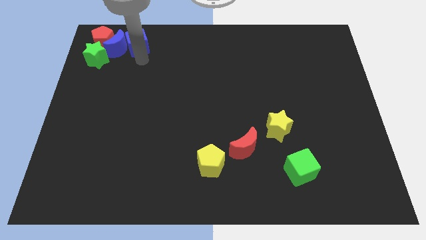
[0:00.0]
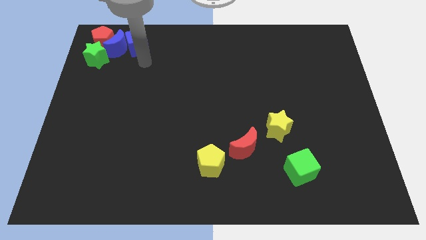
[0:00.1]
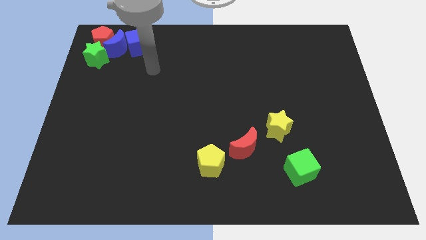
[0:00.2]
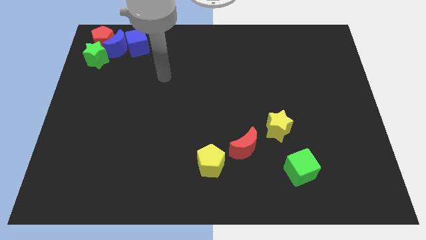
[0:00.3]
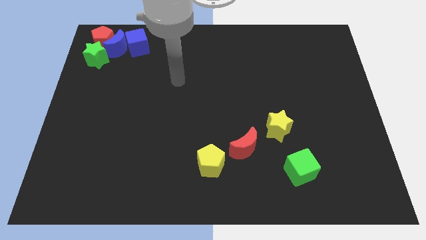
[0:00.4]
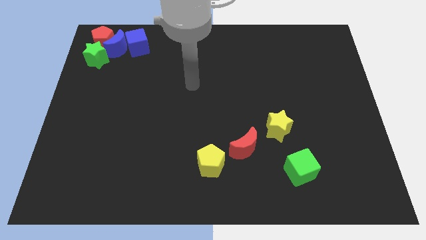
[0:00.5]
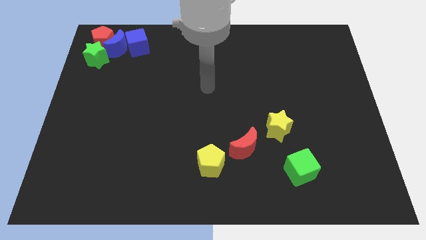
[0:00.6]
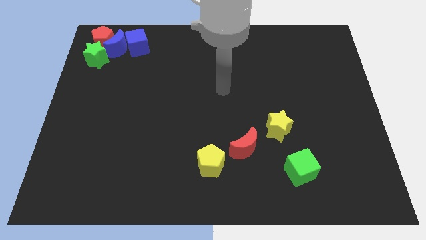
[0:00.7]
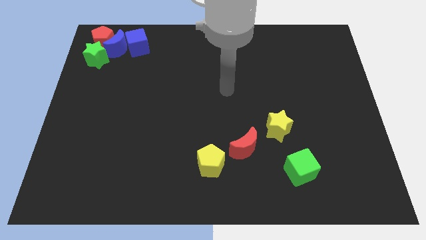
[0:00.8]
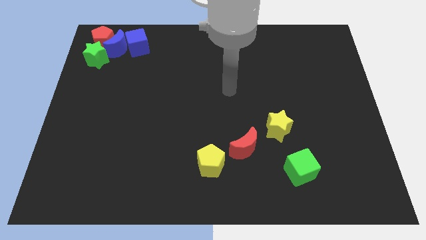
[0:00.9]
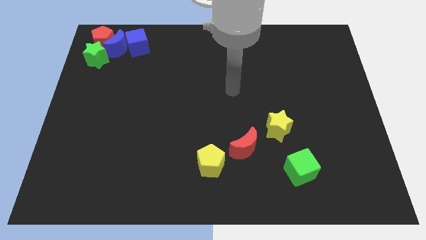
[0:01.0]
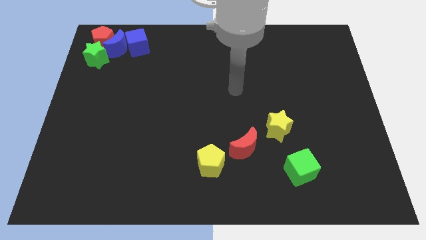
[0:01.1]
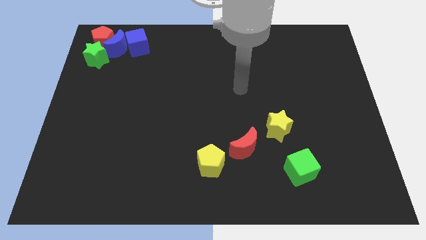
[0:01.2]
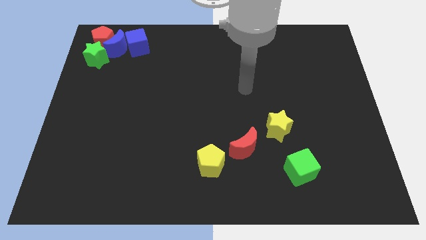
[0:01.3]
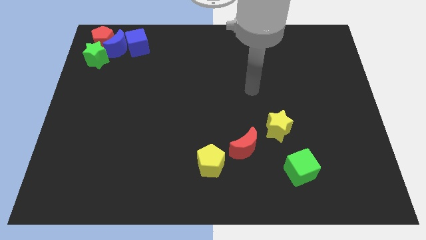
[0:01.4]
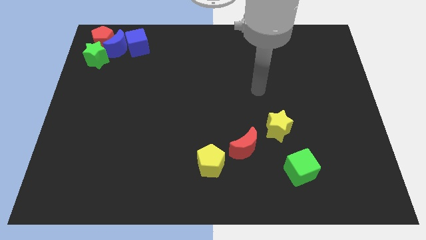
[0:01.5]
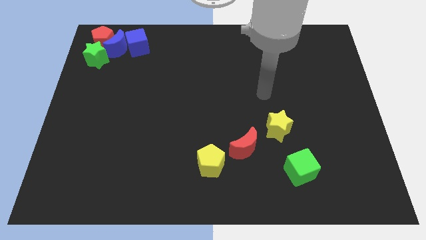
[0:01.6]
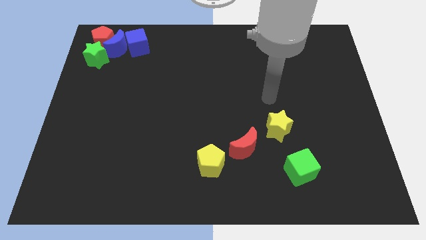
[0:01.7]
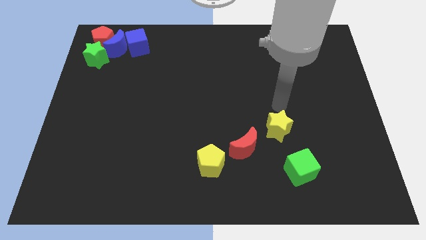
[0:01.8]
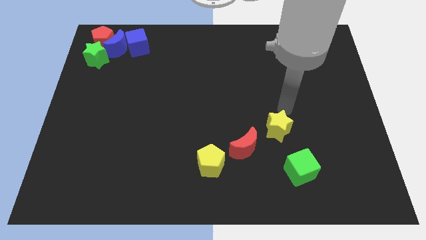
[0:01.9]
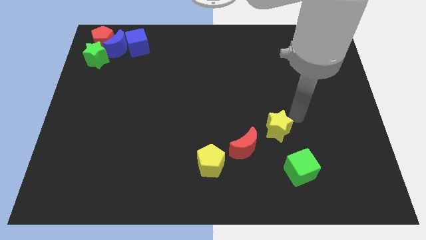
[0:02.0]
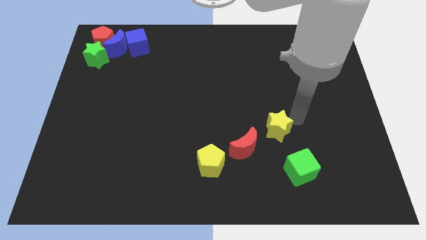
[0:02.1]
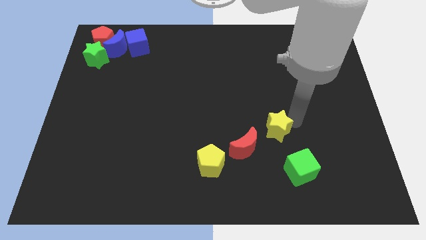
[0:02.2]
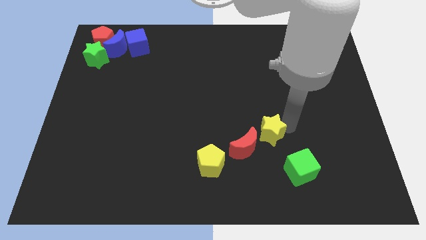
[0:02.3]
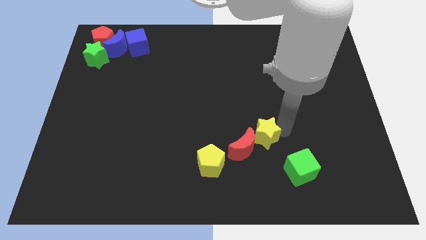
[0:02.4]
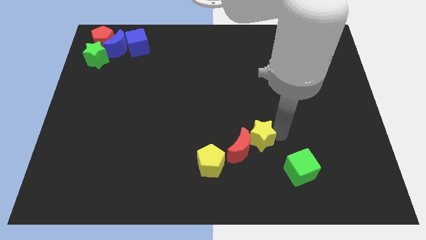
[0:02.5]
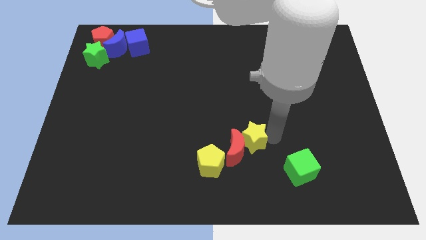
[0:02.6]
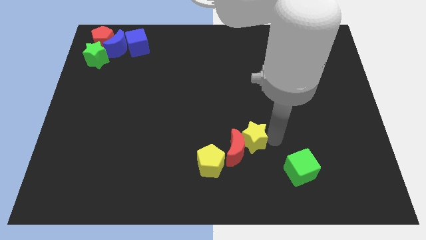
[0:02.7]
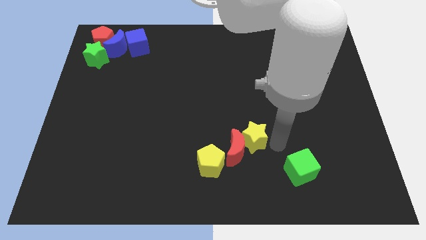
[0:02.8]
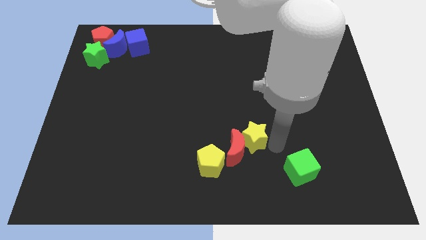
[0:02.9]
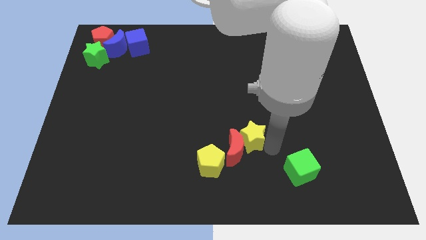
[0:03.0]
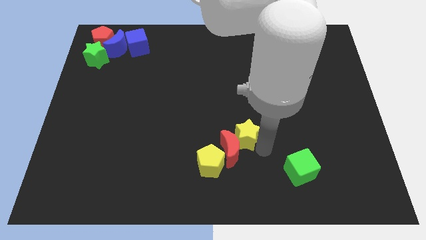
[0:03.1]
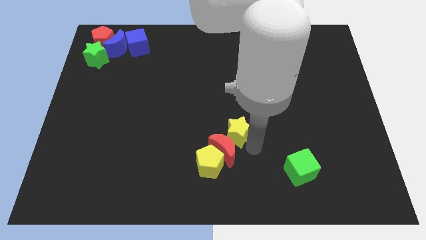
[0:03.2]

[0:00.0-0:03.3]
move the yellow star into the red moon

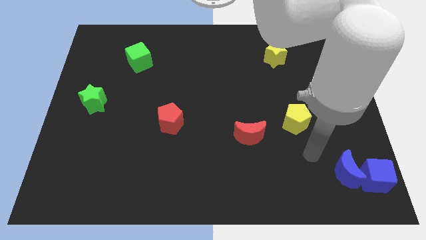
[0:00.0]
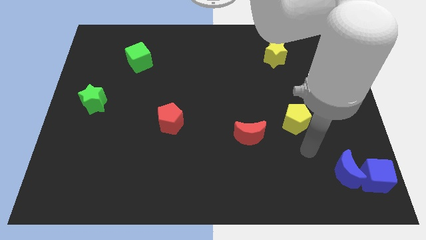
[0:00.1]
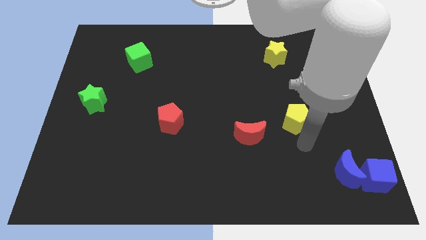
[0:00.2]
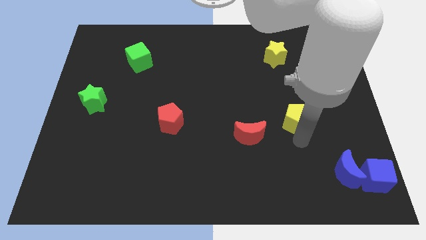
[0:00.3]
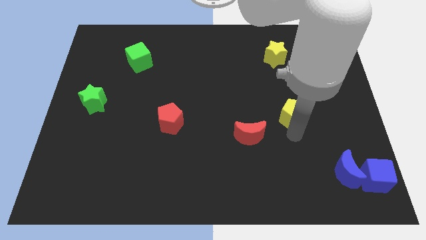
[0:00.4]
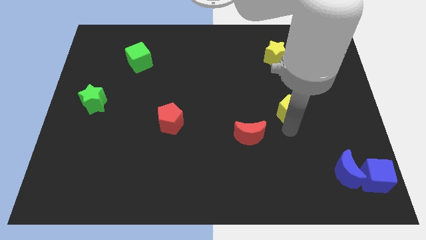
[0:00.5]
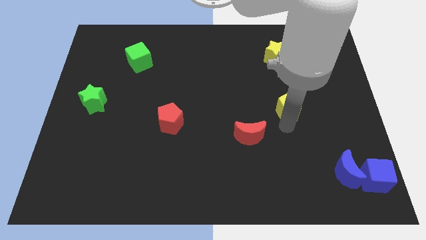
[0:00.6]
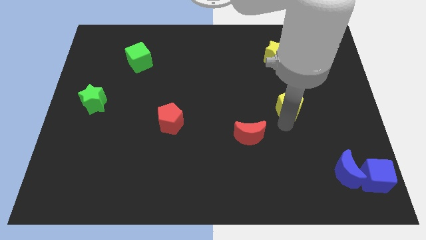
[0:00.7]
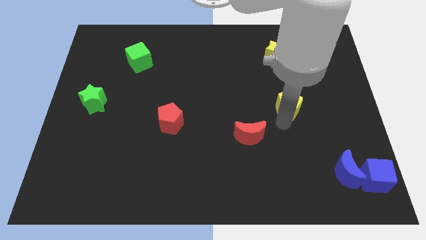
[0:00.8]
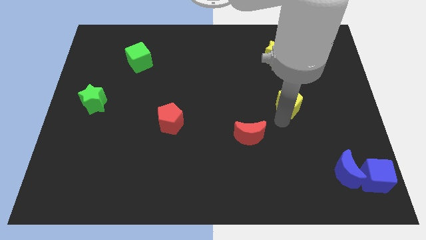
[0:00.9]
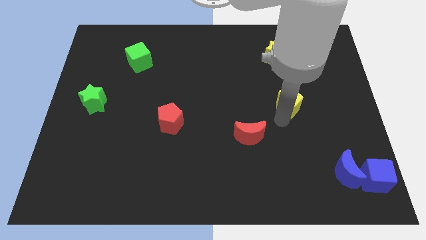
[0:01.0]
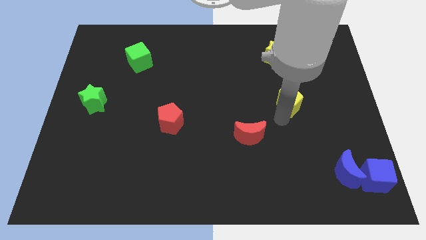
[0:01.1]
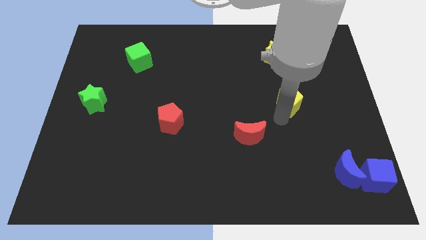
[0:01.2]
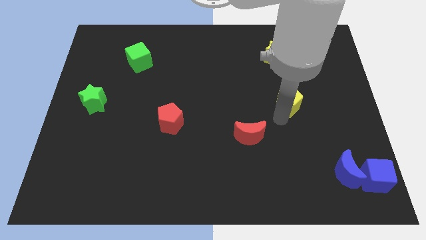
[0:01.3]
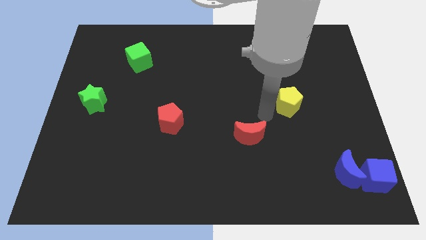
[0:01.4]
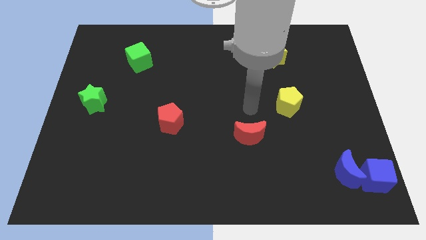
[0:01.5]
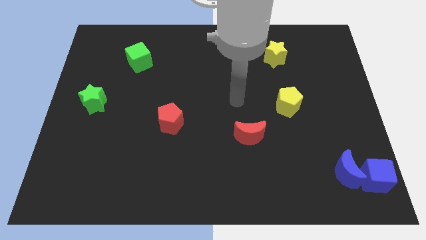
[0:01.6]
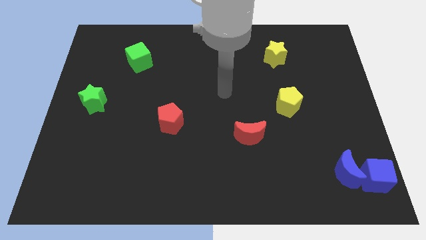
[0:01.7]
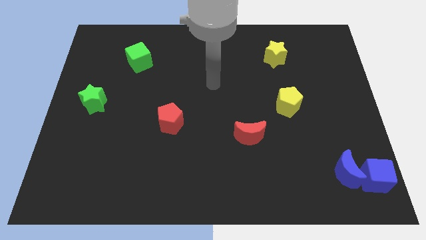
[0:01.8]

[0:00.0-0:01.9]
slightly push the yellow pentagon towards top of the board

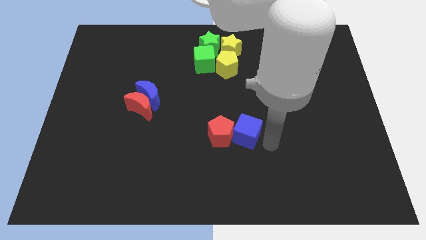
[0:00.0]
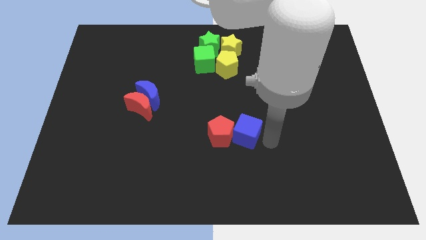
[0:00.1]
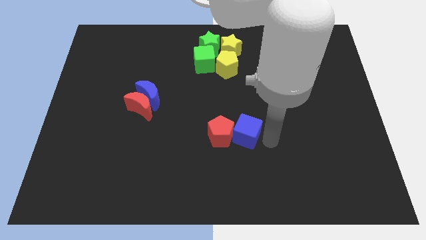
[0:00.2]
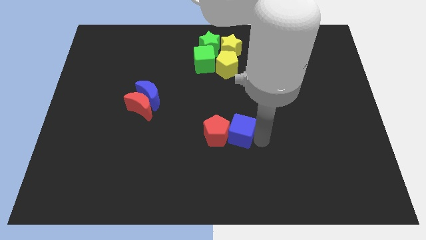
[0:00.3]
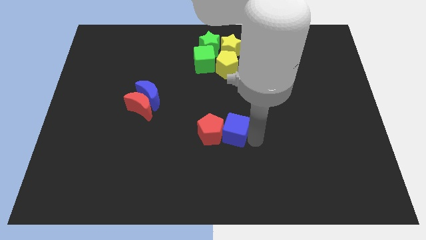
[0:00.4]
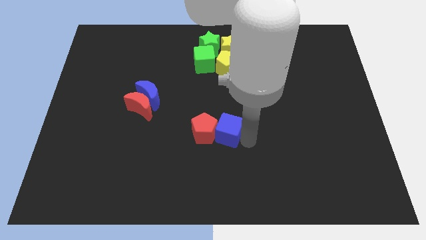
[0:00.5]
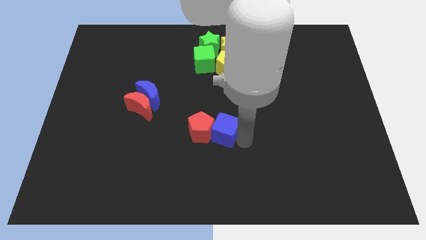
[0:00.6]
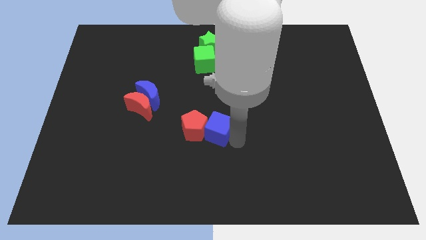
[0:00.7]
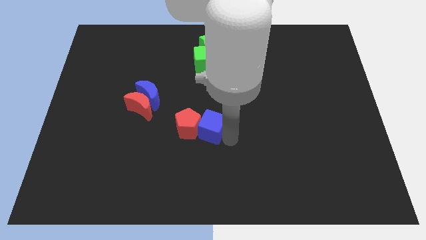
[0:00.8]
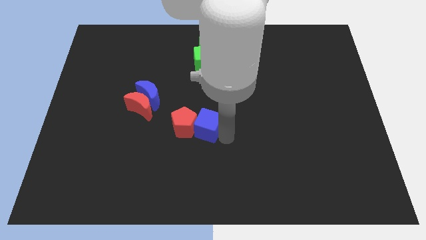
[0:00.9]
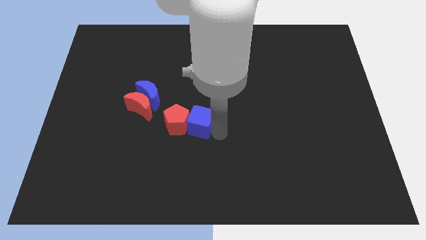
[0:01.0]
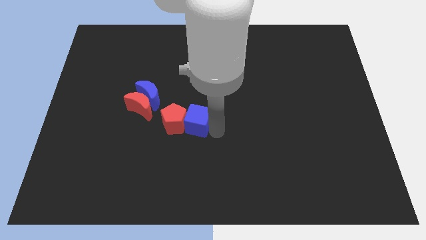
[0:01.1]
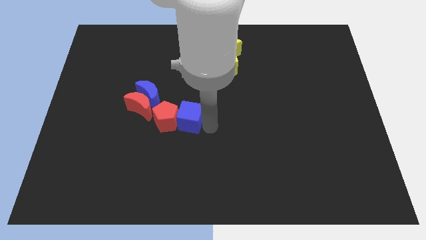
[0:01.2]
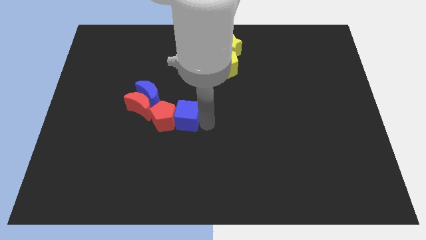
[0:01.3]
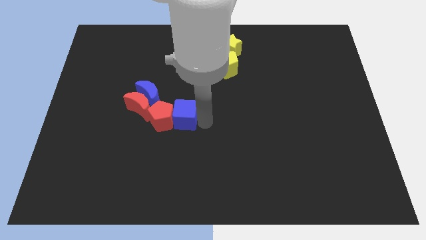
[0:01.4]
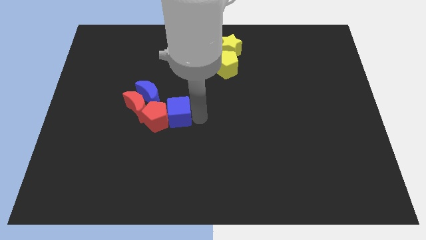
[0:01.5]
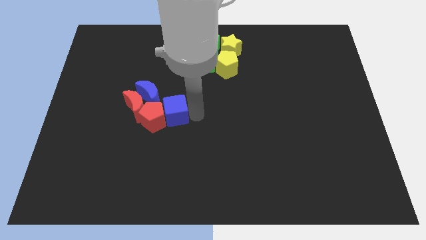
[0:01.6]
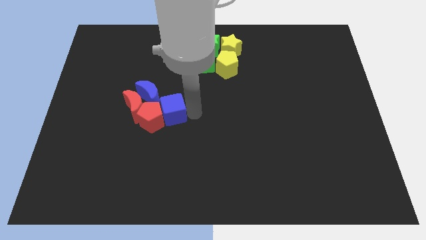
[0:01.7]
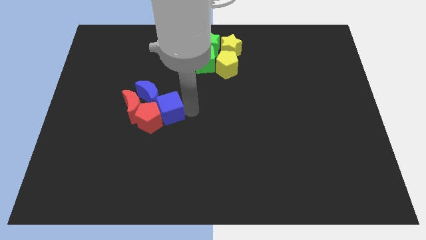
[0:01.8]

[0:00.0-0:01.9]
move the blue cube along with the red pentagon into the red moon

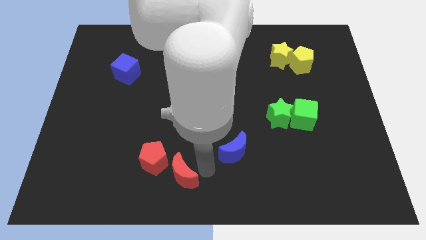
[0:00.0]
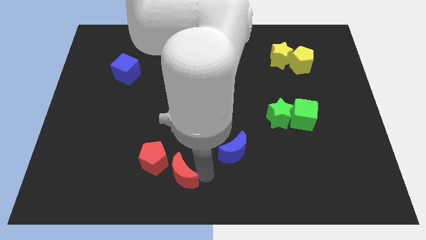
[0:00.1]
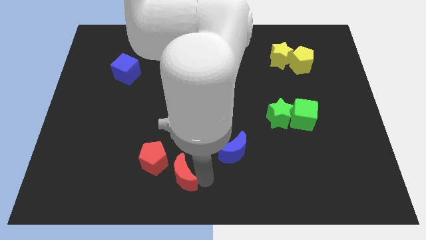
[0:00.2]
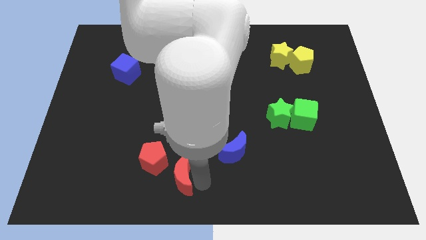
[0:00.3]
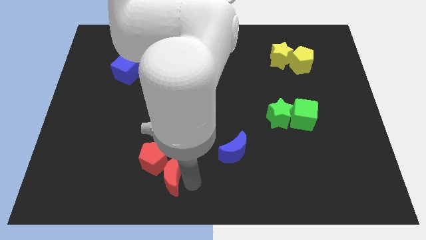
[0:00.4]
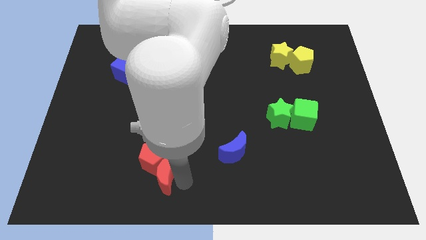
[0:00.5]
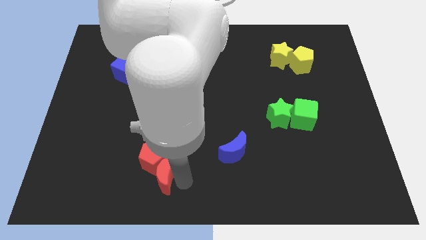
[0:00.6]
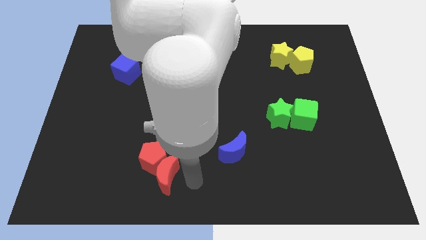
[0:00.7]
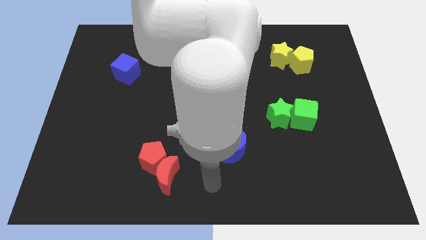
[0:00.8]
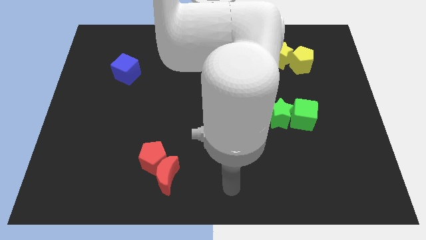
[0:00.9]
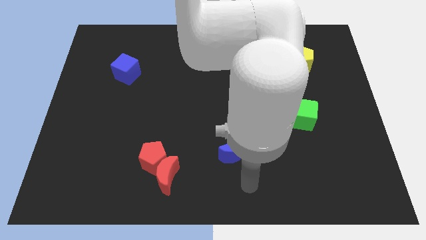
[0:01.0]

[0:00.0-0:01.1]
push red crescent into red pentagon

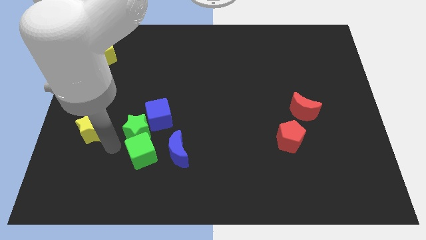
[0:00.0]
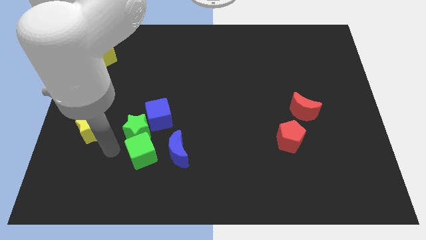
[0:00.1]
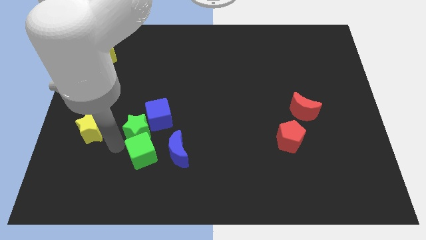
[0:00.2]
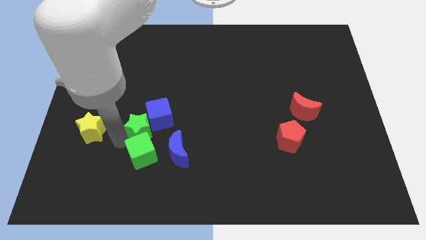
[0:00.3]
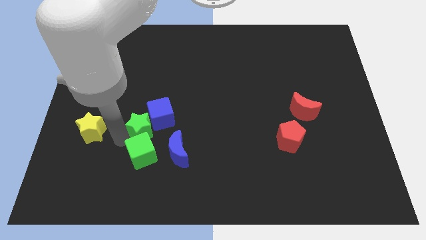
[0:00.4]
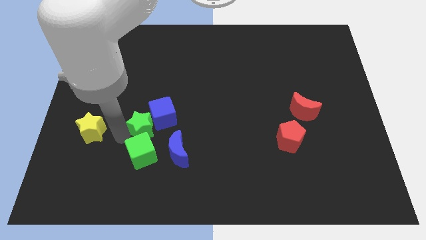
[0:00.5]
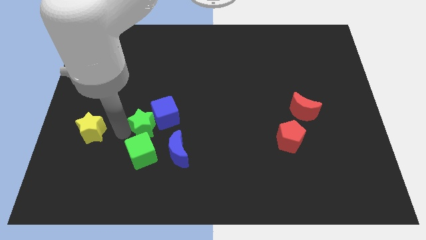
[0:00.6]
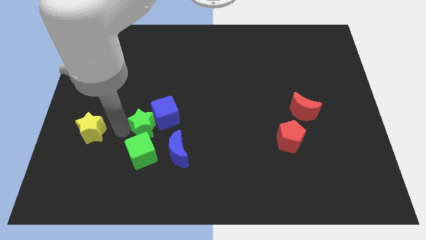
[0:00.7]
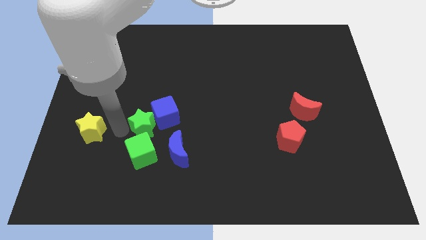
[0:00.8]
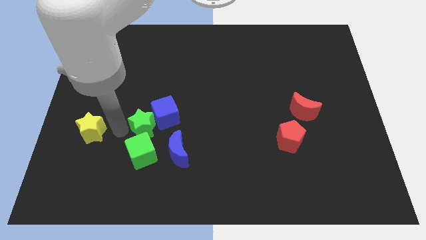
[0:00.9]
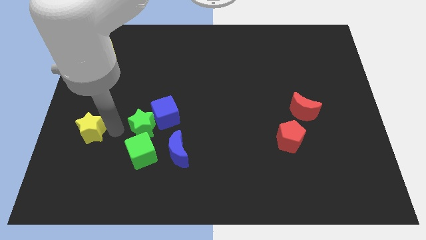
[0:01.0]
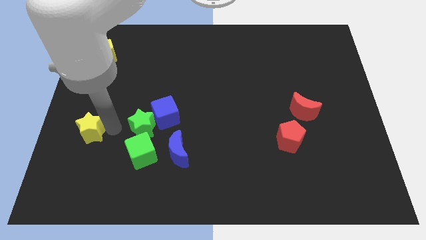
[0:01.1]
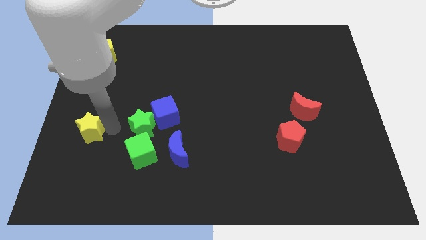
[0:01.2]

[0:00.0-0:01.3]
push the green star into the blue cube
